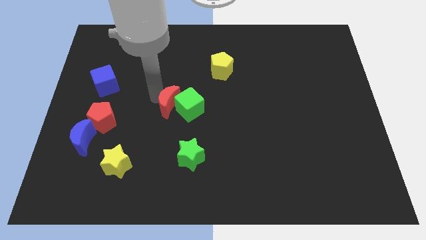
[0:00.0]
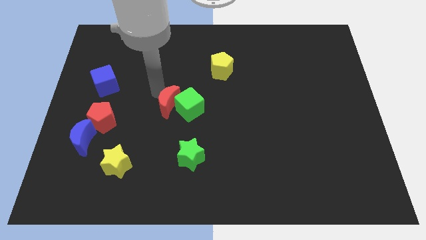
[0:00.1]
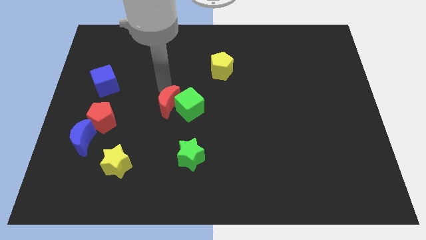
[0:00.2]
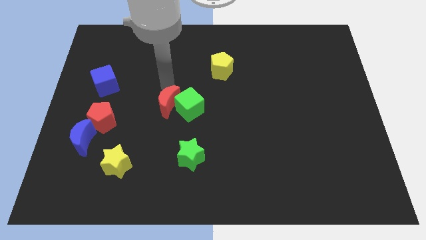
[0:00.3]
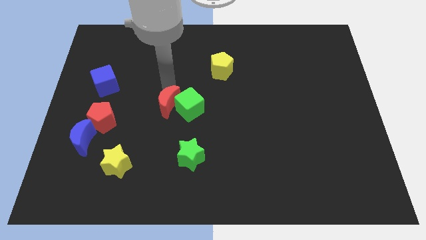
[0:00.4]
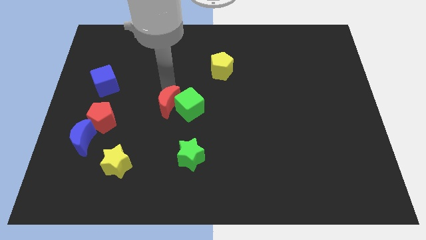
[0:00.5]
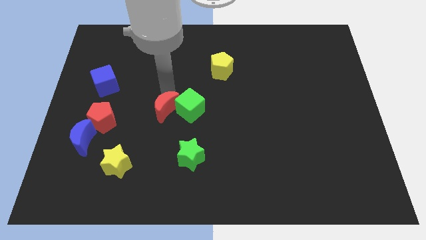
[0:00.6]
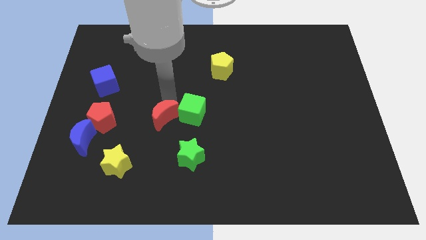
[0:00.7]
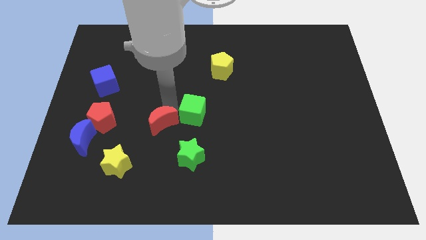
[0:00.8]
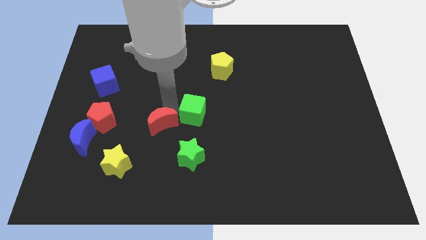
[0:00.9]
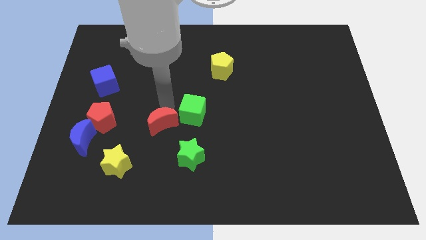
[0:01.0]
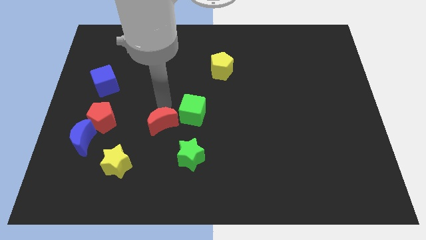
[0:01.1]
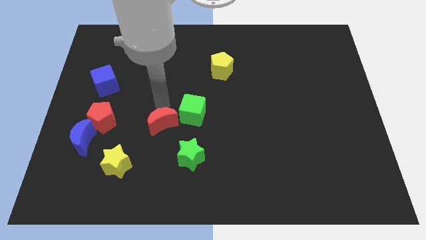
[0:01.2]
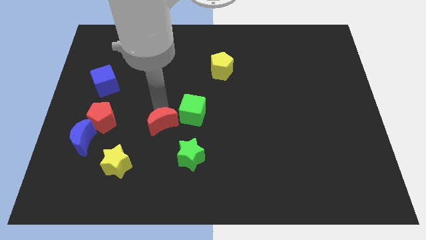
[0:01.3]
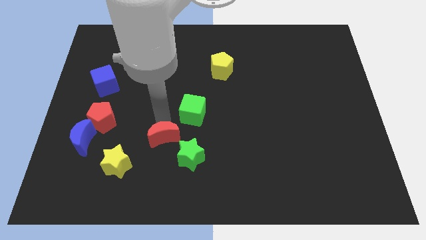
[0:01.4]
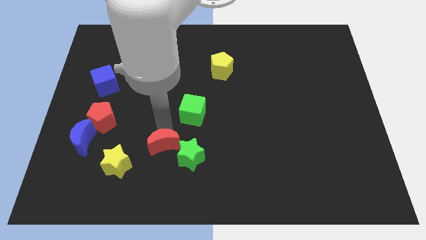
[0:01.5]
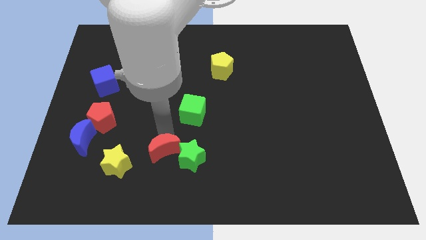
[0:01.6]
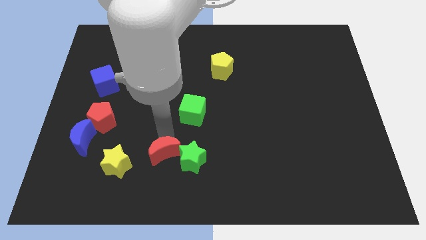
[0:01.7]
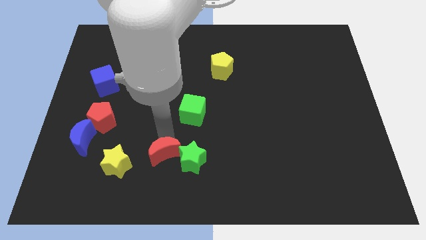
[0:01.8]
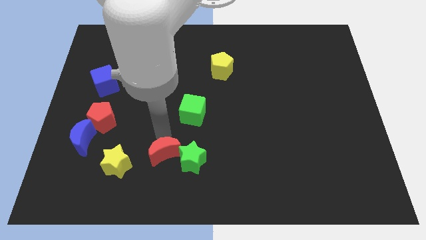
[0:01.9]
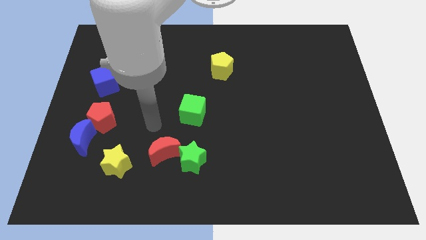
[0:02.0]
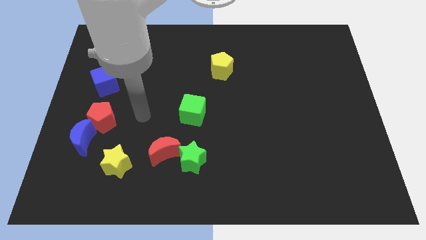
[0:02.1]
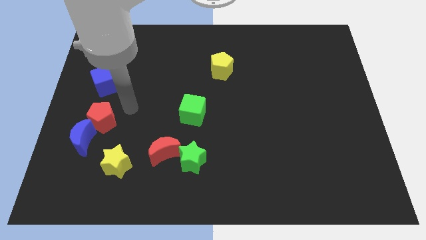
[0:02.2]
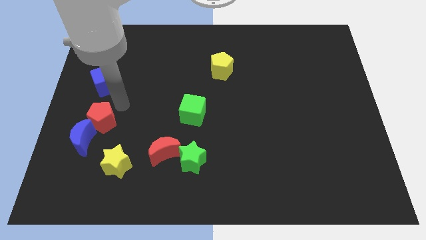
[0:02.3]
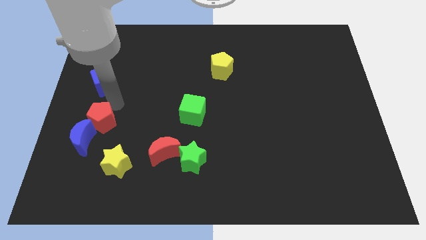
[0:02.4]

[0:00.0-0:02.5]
separate the red moon from green cube

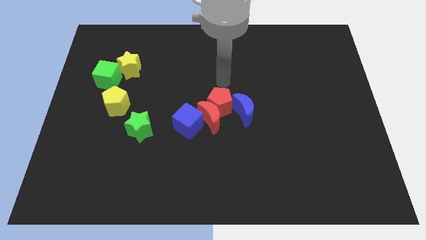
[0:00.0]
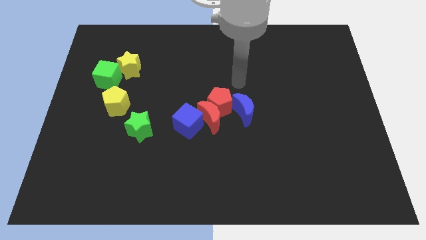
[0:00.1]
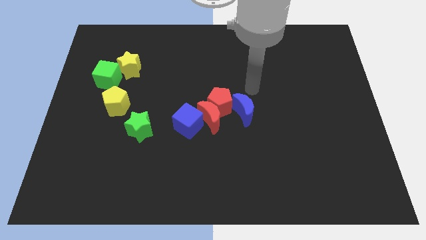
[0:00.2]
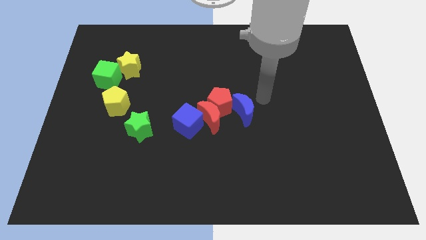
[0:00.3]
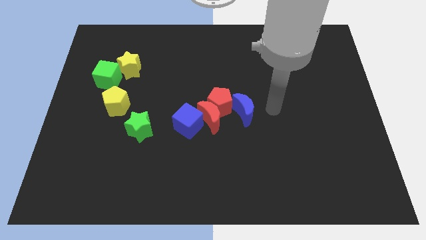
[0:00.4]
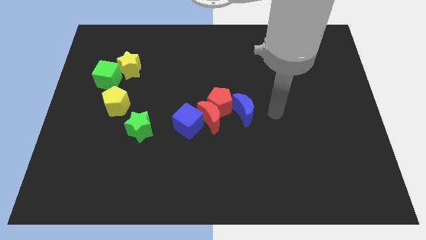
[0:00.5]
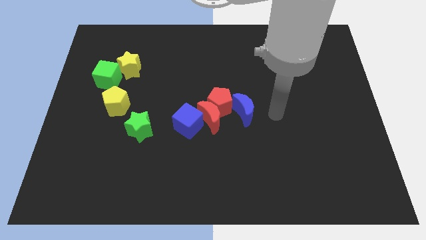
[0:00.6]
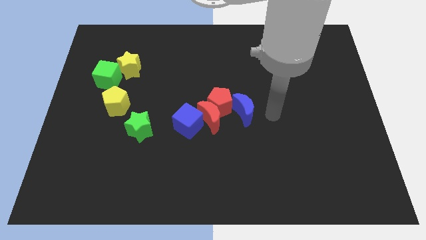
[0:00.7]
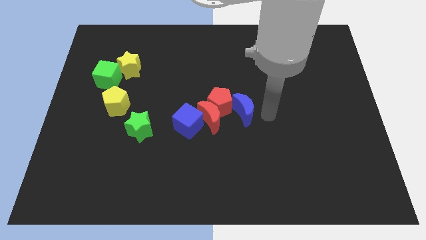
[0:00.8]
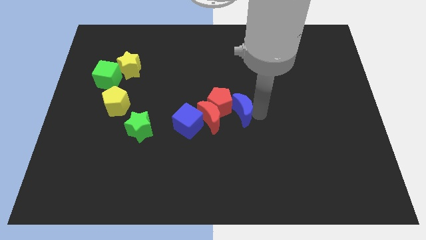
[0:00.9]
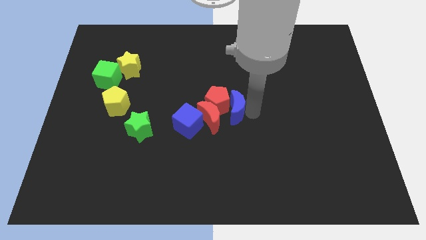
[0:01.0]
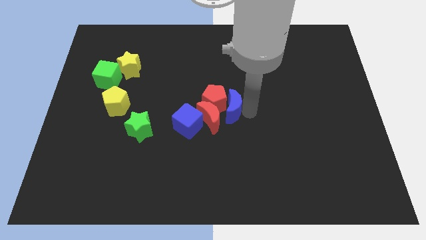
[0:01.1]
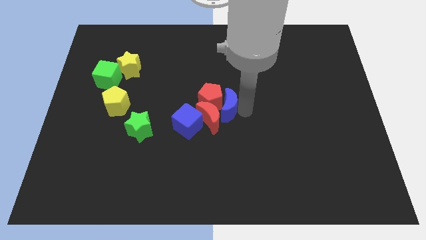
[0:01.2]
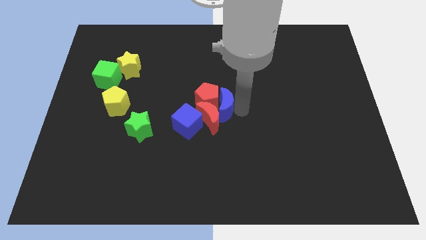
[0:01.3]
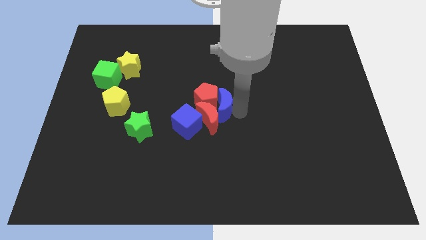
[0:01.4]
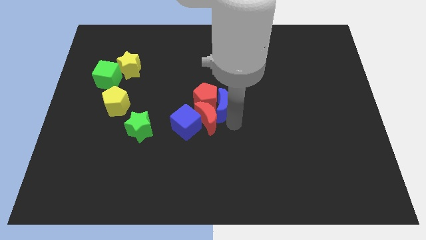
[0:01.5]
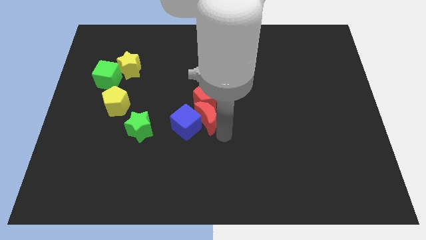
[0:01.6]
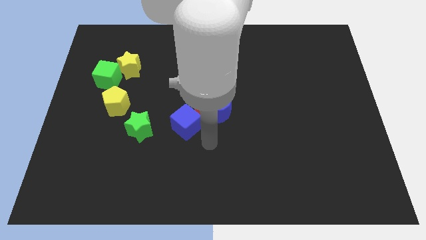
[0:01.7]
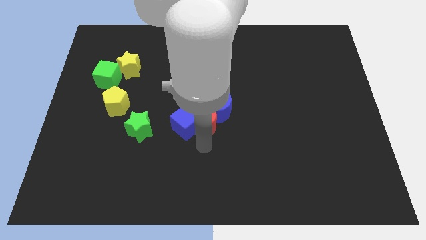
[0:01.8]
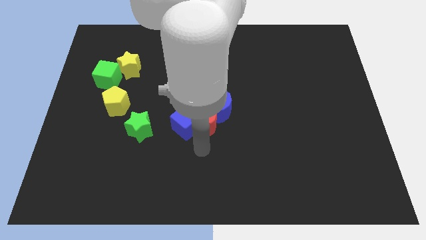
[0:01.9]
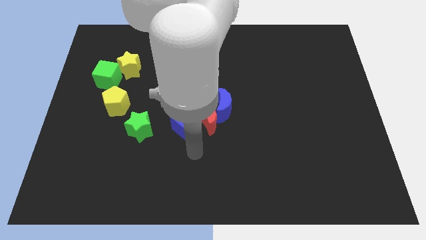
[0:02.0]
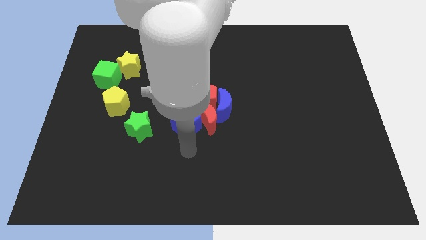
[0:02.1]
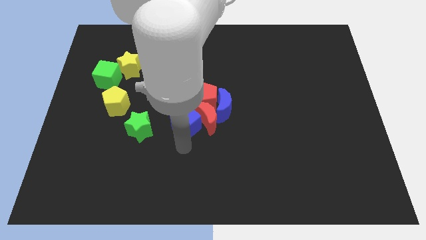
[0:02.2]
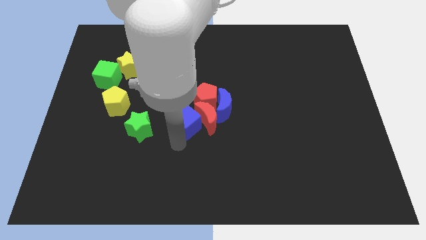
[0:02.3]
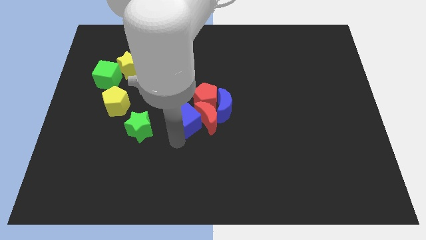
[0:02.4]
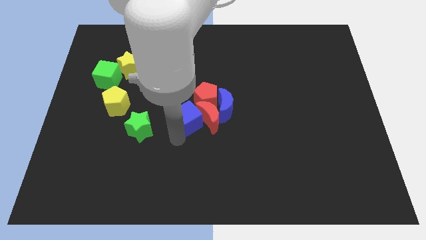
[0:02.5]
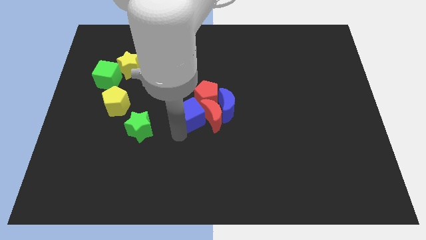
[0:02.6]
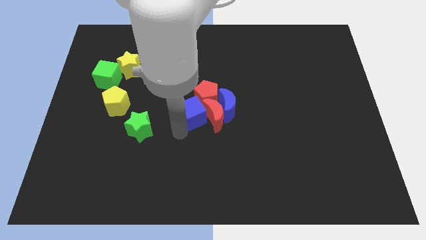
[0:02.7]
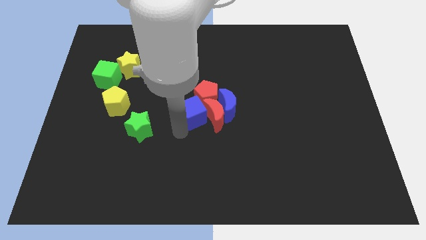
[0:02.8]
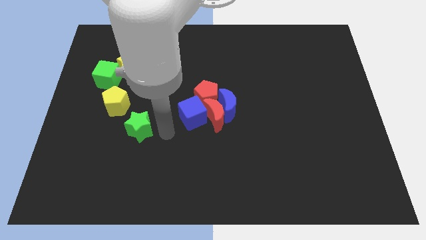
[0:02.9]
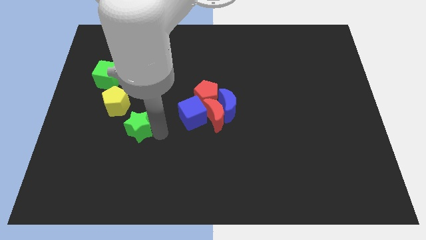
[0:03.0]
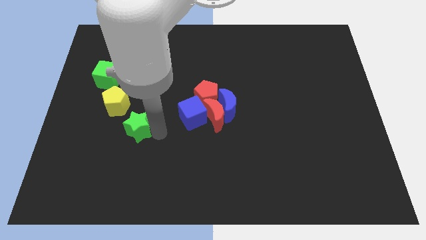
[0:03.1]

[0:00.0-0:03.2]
move the blue crescent towards the red pentagon

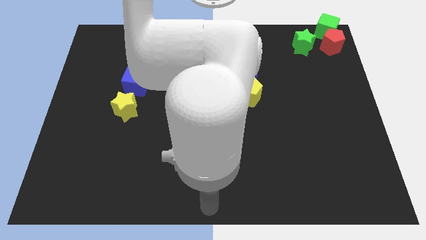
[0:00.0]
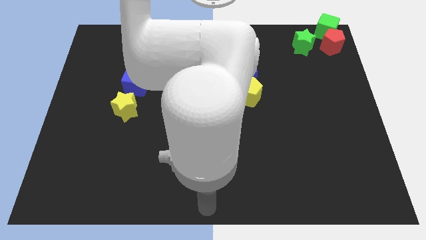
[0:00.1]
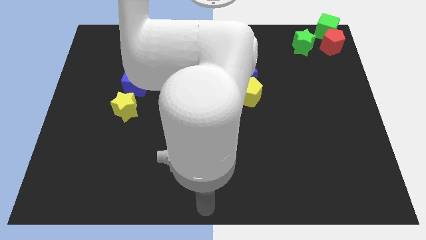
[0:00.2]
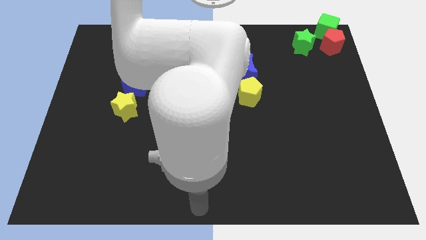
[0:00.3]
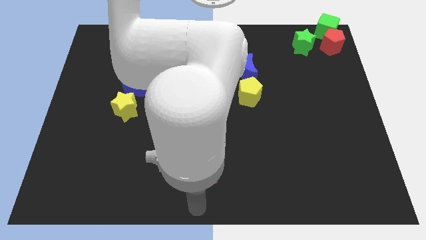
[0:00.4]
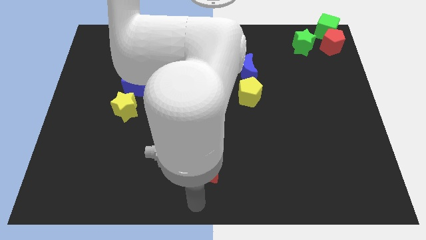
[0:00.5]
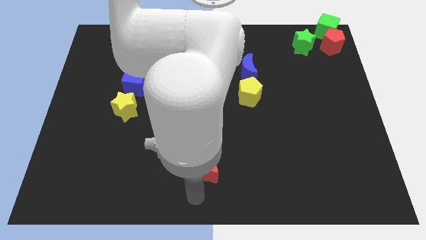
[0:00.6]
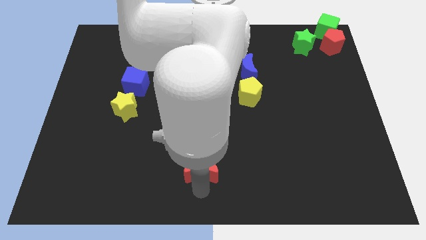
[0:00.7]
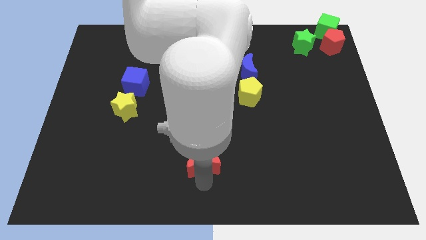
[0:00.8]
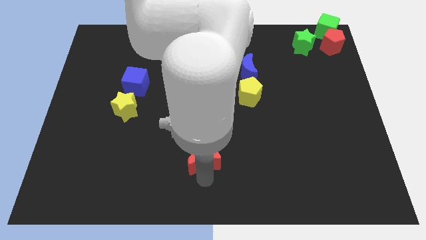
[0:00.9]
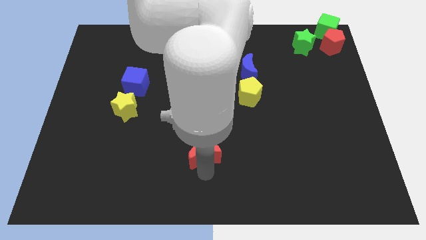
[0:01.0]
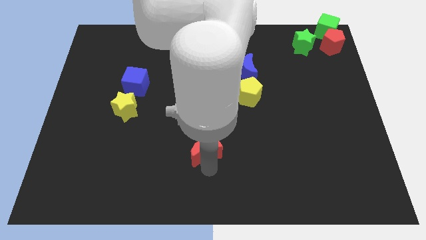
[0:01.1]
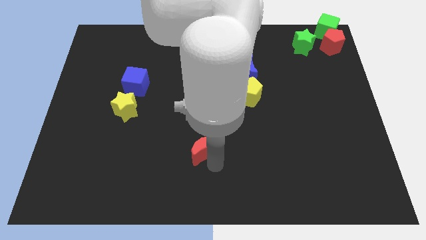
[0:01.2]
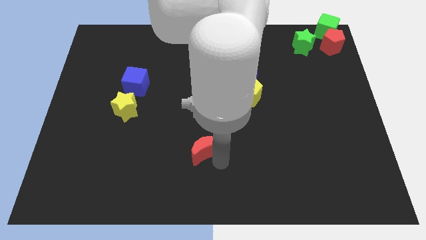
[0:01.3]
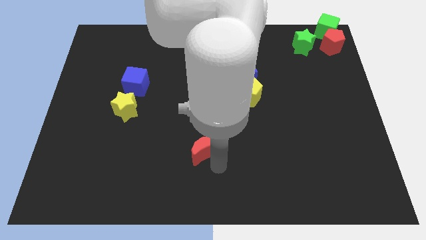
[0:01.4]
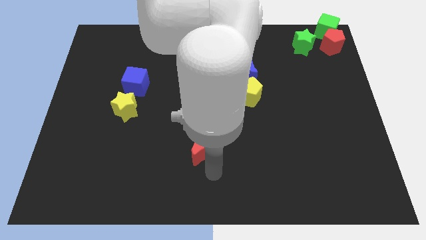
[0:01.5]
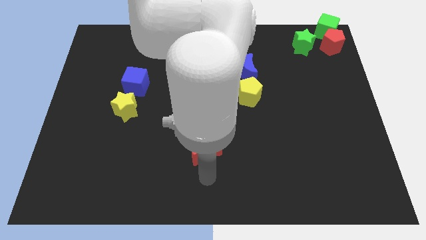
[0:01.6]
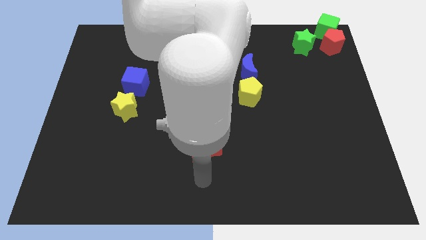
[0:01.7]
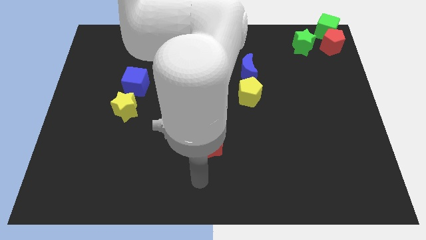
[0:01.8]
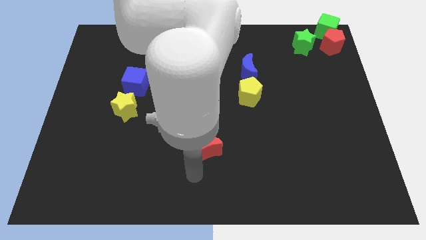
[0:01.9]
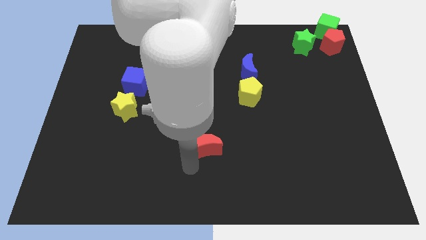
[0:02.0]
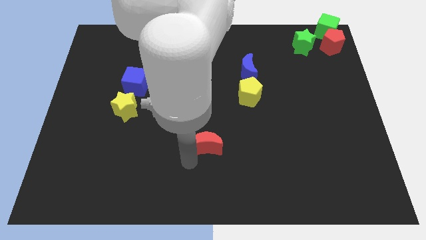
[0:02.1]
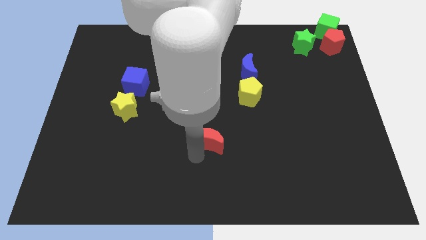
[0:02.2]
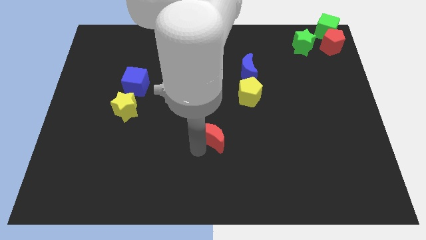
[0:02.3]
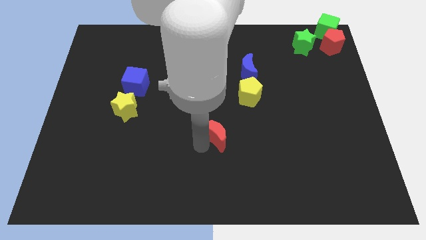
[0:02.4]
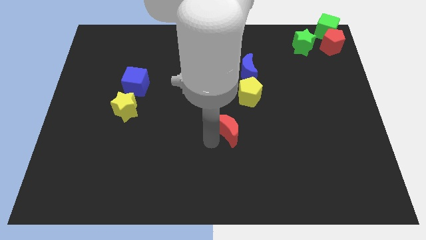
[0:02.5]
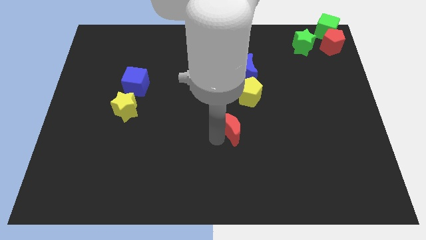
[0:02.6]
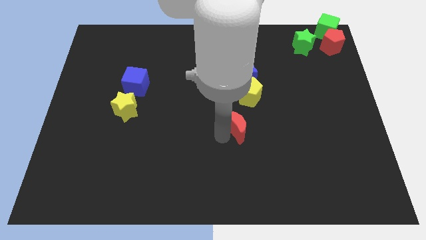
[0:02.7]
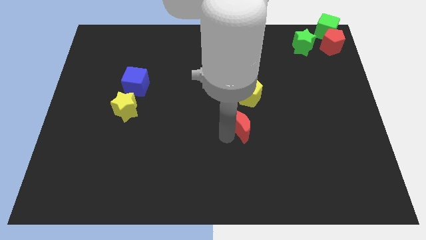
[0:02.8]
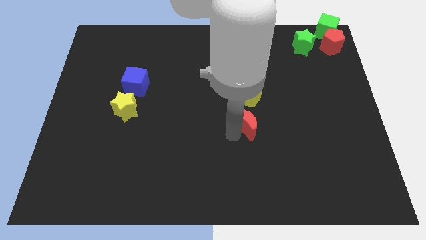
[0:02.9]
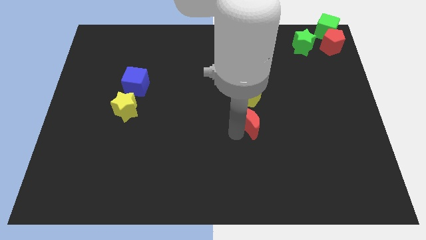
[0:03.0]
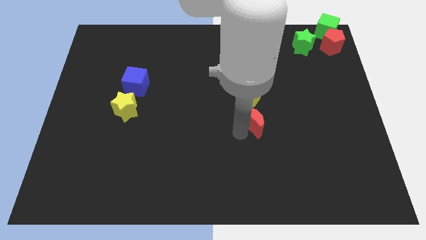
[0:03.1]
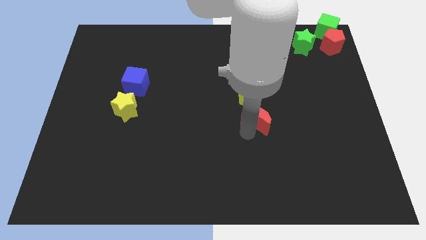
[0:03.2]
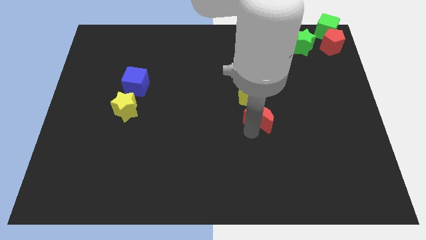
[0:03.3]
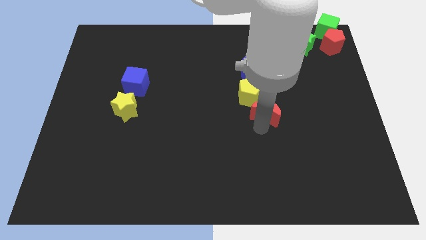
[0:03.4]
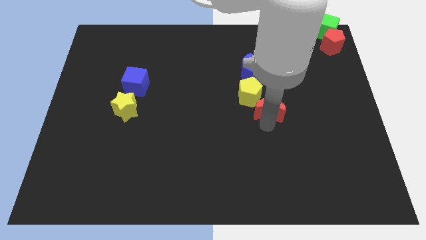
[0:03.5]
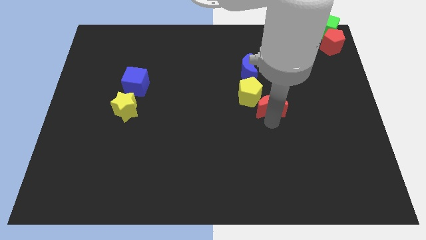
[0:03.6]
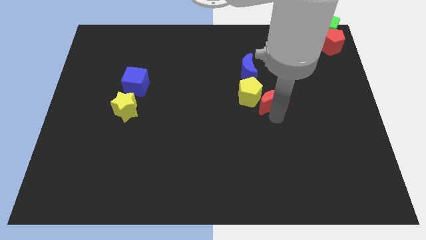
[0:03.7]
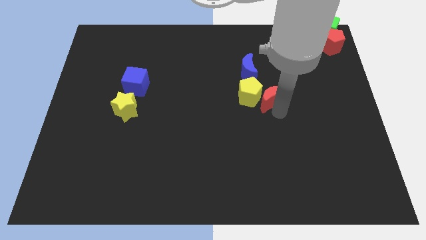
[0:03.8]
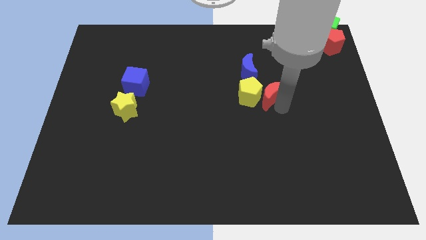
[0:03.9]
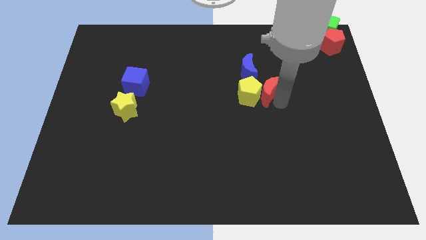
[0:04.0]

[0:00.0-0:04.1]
place red moon close to yellow pentagon
